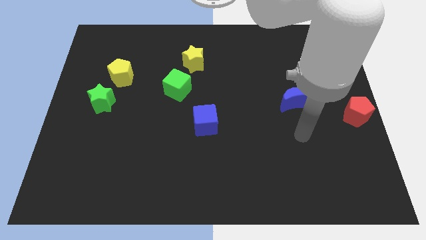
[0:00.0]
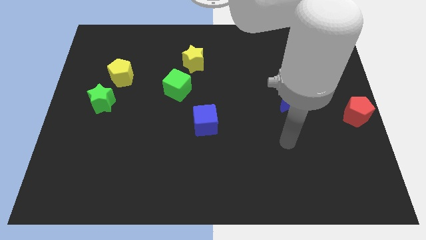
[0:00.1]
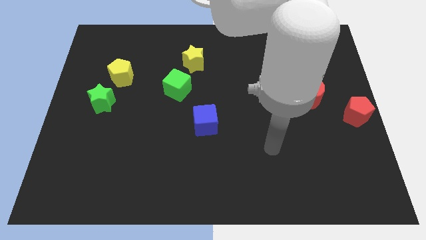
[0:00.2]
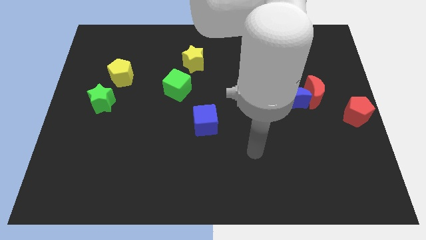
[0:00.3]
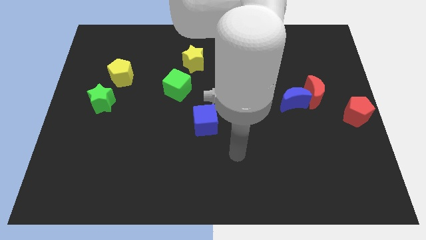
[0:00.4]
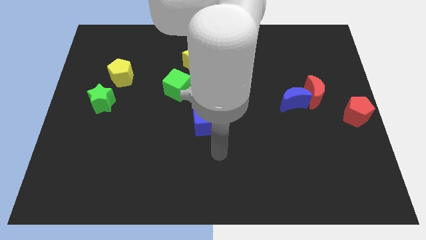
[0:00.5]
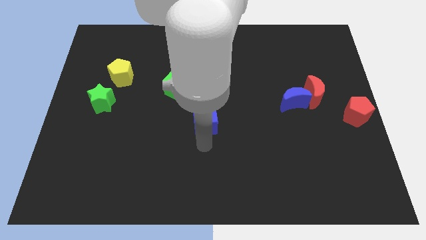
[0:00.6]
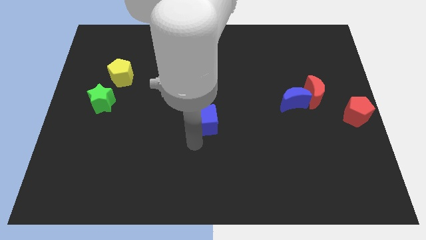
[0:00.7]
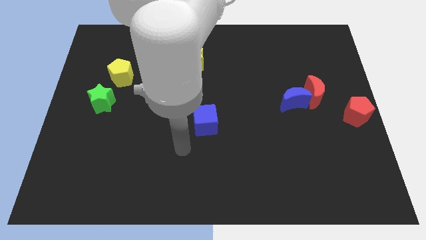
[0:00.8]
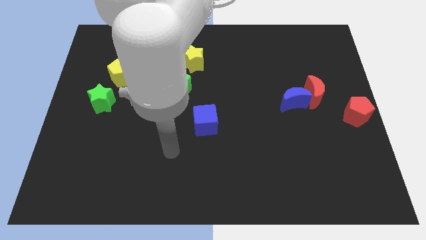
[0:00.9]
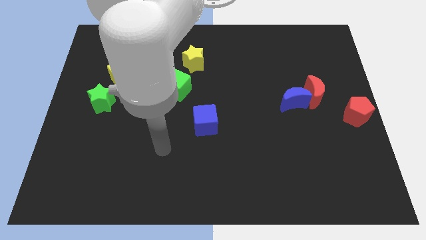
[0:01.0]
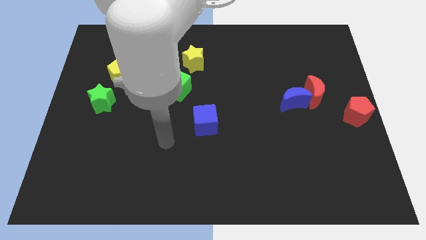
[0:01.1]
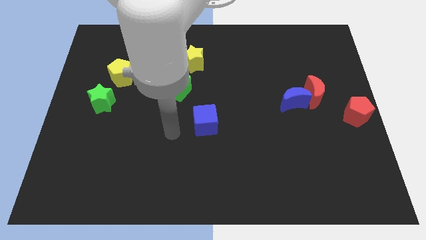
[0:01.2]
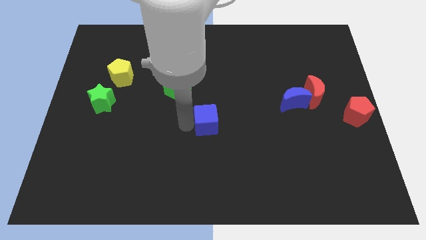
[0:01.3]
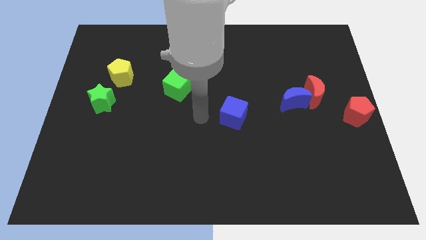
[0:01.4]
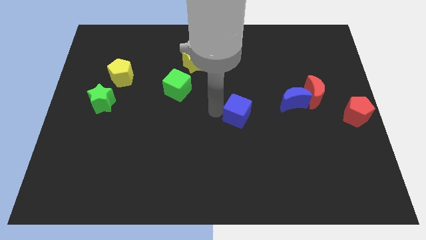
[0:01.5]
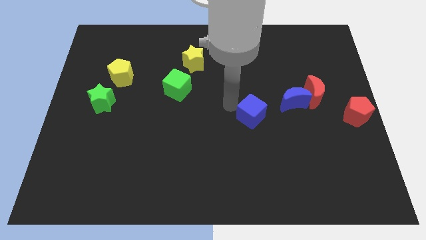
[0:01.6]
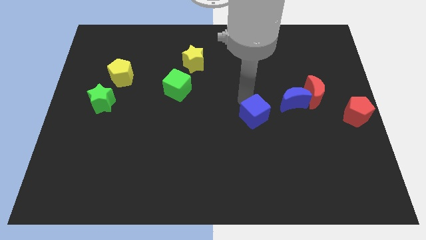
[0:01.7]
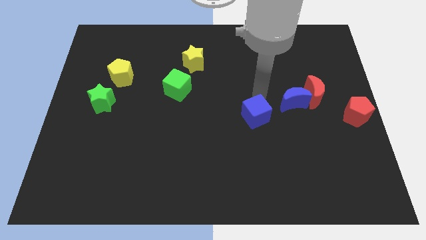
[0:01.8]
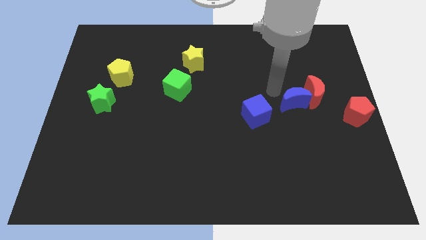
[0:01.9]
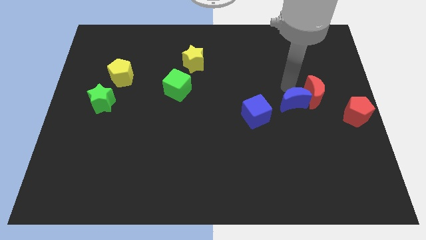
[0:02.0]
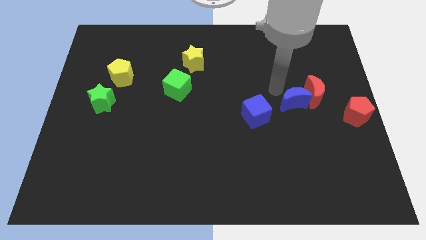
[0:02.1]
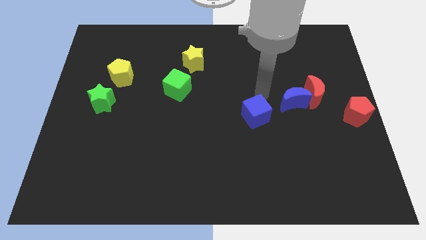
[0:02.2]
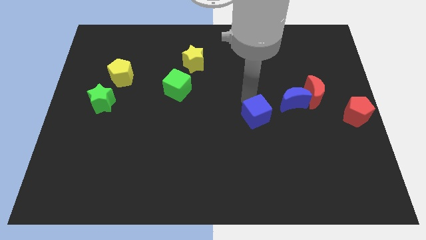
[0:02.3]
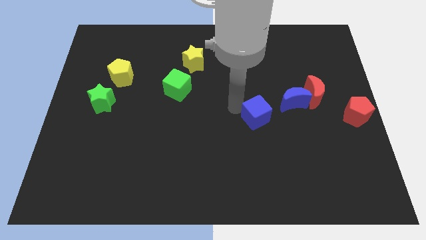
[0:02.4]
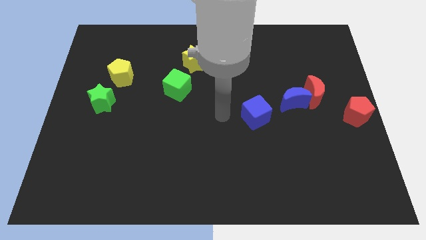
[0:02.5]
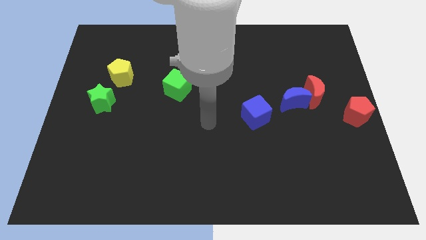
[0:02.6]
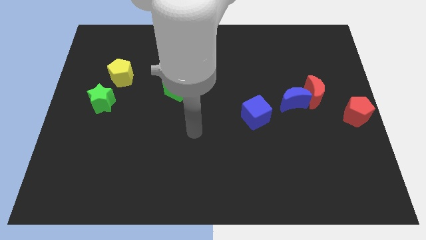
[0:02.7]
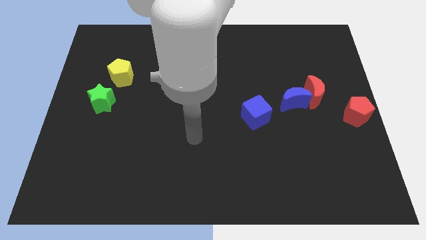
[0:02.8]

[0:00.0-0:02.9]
slide blue cube to the left of the blue moon

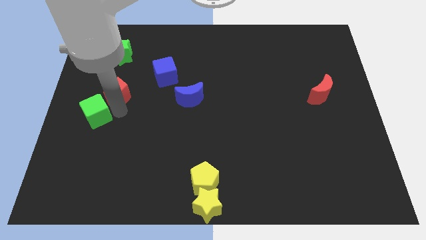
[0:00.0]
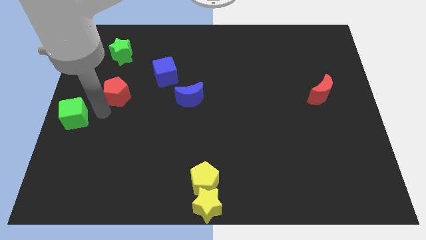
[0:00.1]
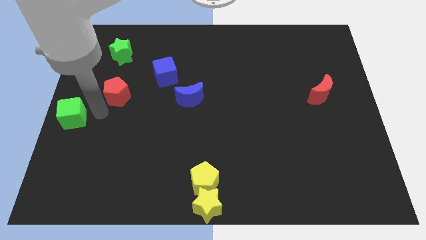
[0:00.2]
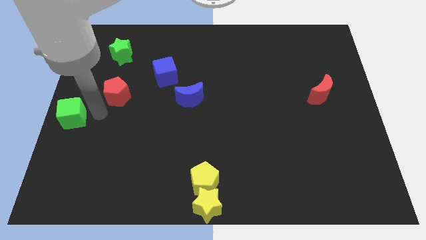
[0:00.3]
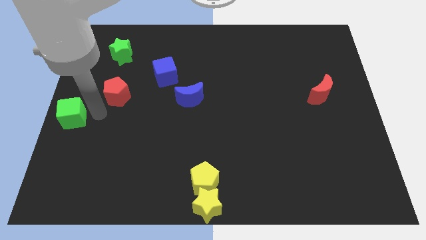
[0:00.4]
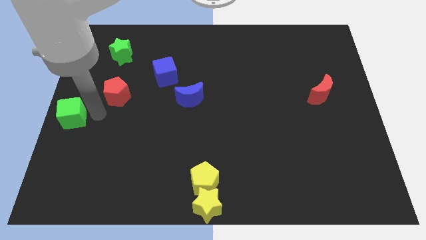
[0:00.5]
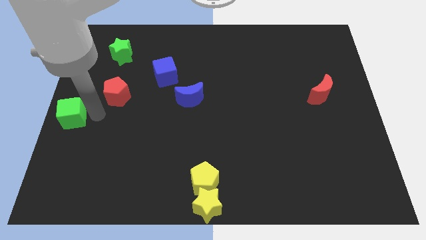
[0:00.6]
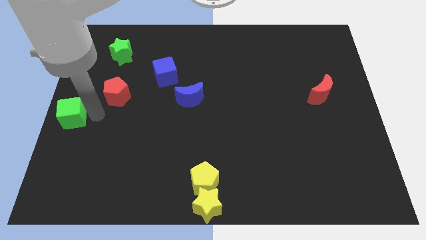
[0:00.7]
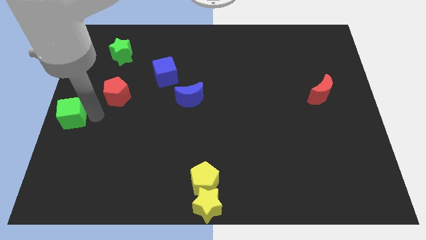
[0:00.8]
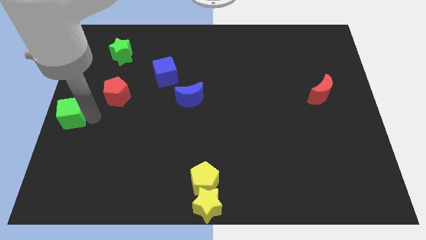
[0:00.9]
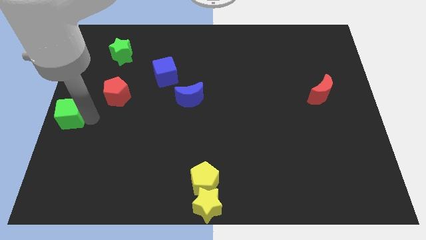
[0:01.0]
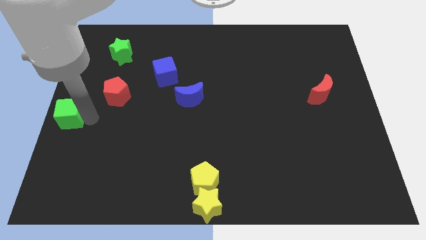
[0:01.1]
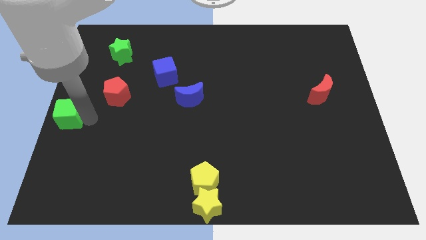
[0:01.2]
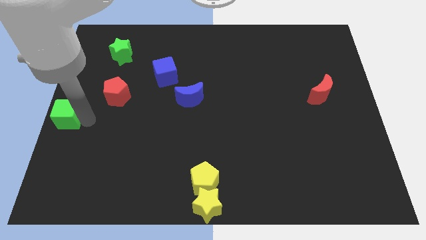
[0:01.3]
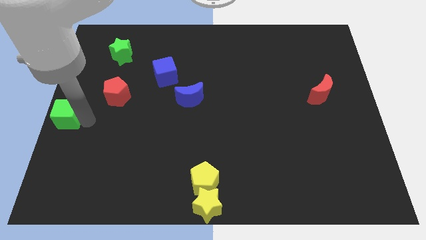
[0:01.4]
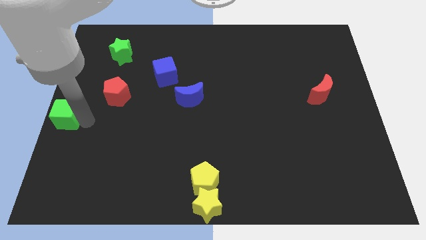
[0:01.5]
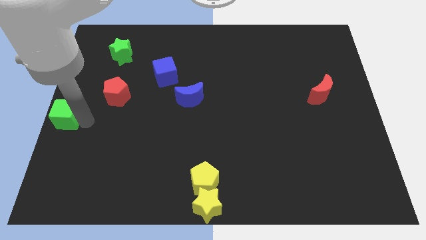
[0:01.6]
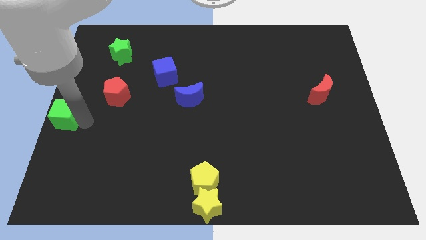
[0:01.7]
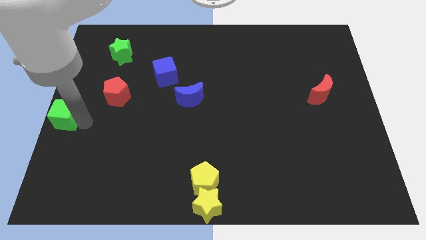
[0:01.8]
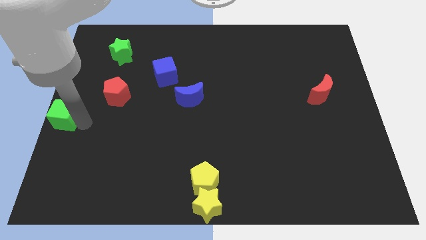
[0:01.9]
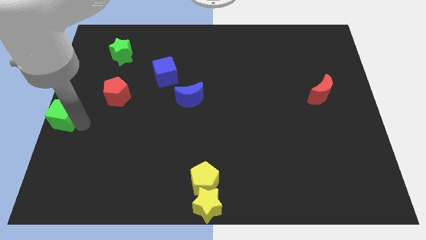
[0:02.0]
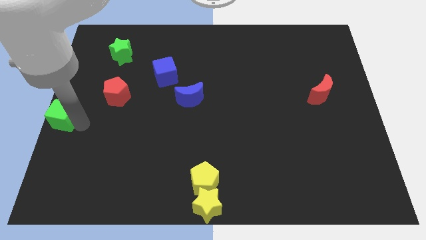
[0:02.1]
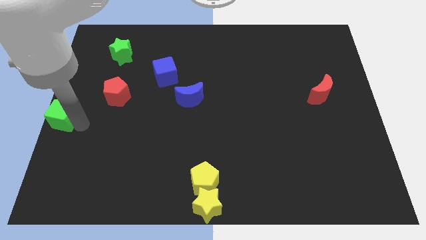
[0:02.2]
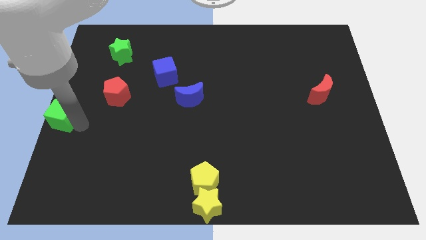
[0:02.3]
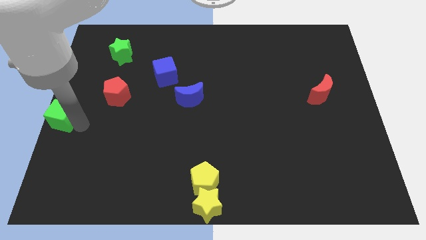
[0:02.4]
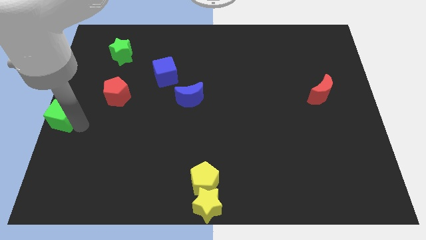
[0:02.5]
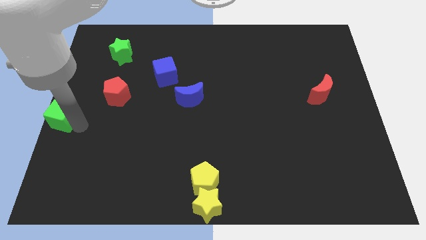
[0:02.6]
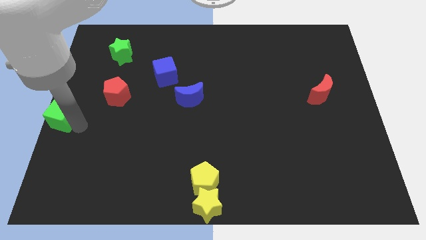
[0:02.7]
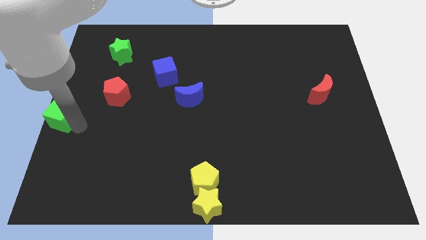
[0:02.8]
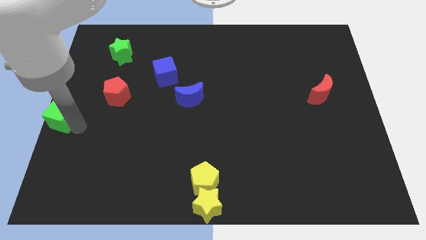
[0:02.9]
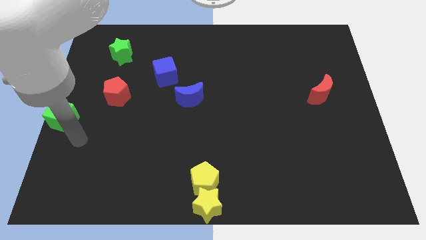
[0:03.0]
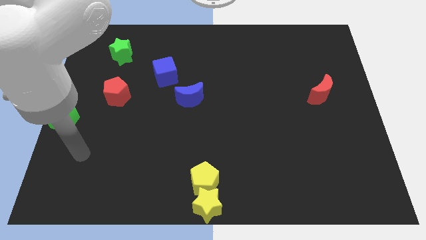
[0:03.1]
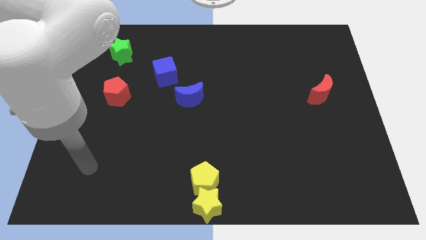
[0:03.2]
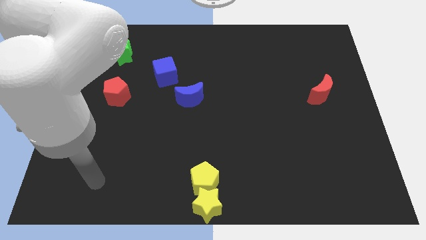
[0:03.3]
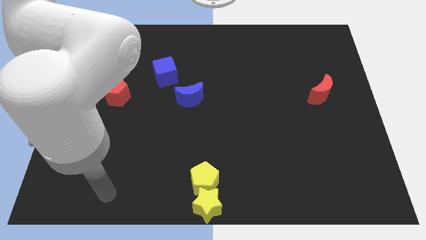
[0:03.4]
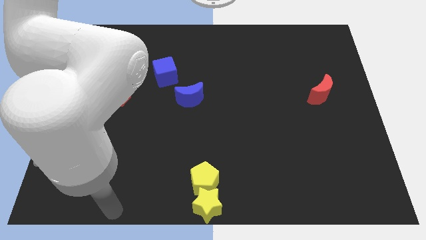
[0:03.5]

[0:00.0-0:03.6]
place the green cube at the left center of the board

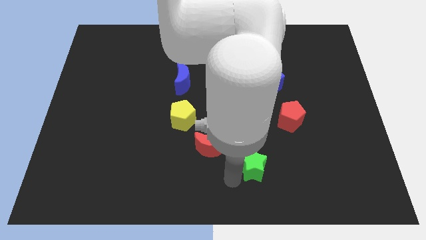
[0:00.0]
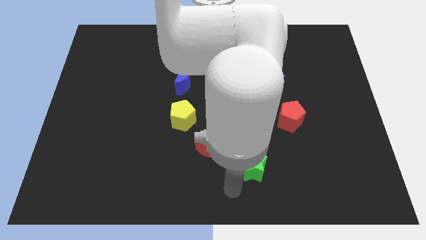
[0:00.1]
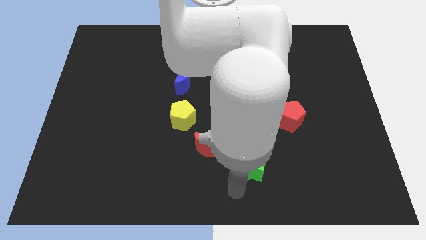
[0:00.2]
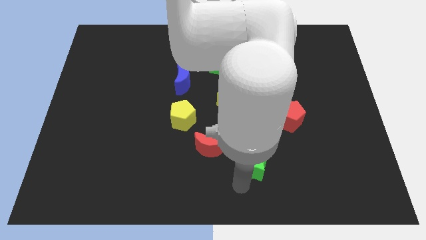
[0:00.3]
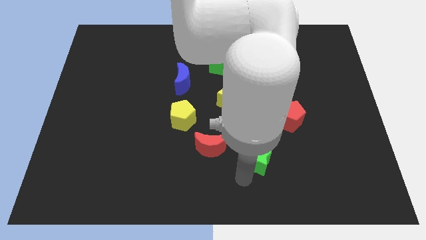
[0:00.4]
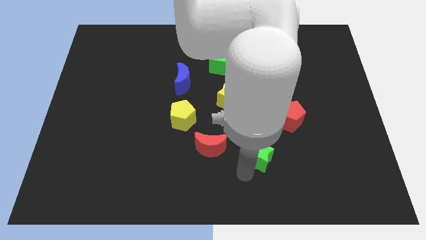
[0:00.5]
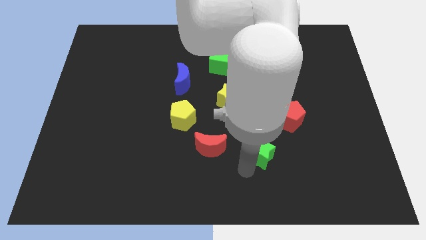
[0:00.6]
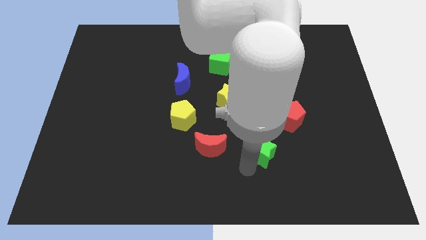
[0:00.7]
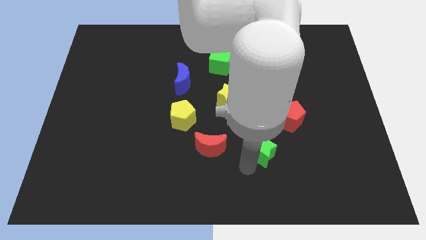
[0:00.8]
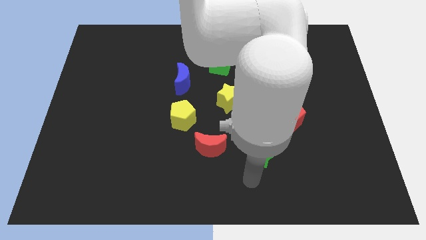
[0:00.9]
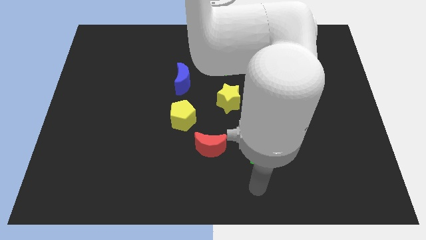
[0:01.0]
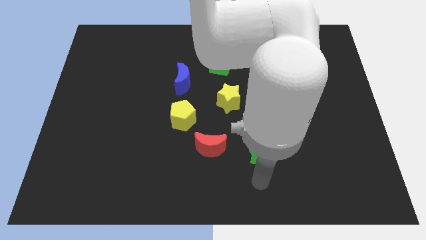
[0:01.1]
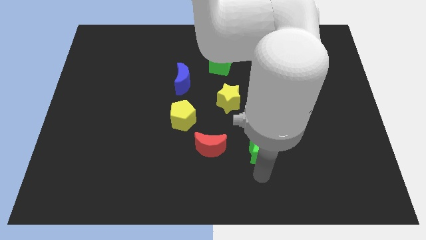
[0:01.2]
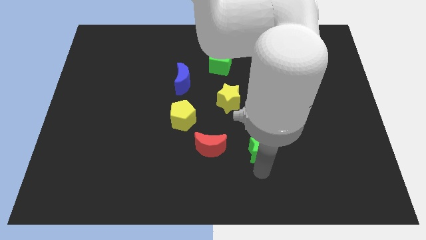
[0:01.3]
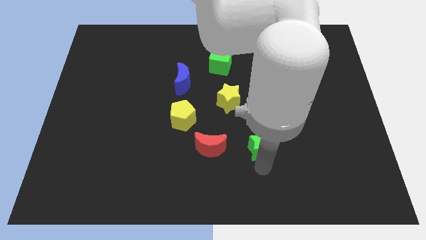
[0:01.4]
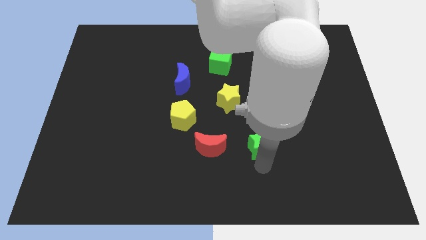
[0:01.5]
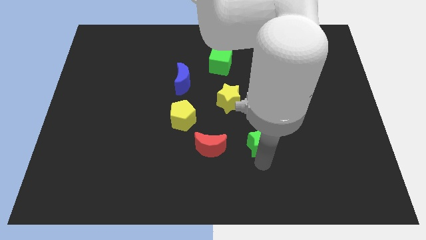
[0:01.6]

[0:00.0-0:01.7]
put the green star right to the red moon

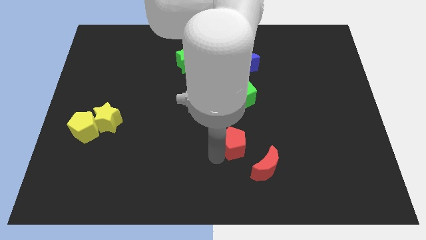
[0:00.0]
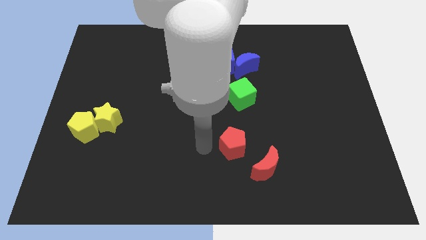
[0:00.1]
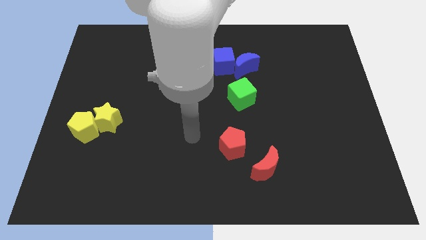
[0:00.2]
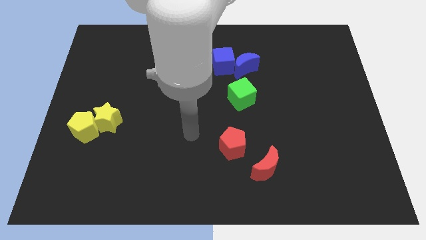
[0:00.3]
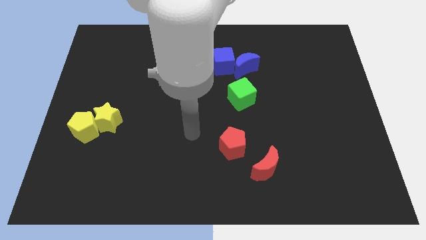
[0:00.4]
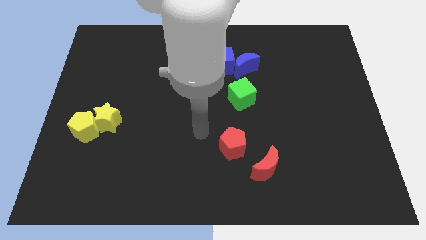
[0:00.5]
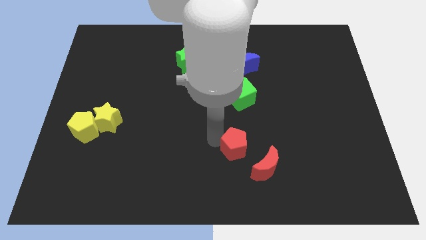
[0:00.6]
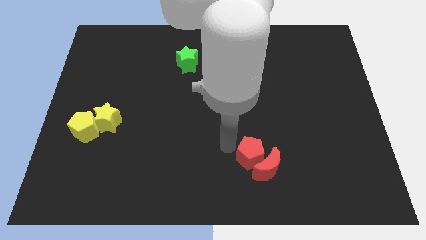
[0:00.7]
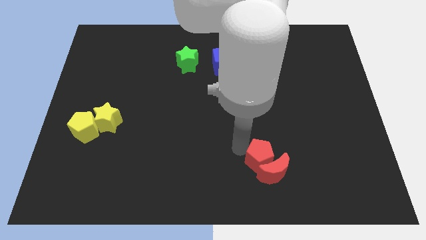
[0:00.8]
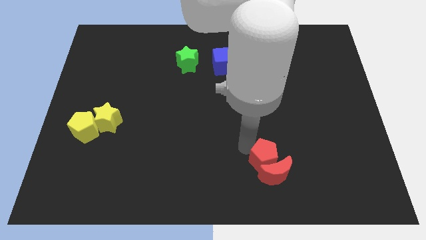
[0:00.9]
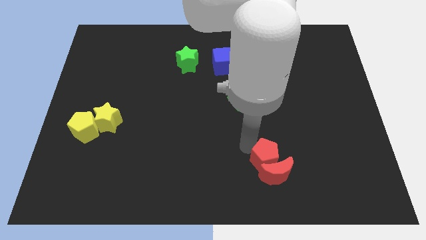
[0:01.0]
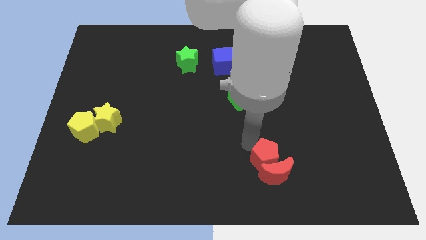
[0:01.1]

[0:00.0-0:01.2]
push red pentagon into red crescent
